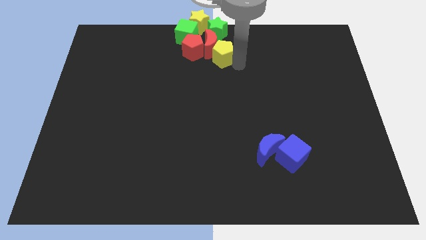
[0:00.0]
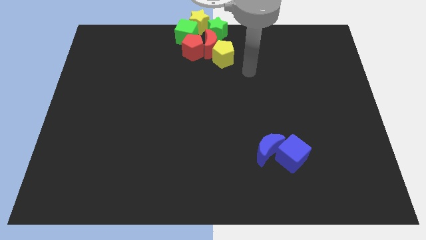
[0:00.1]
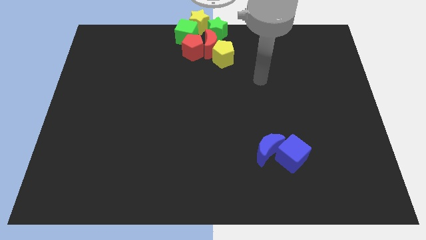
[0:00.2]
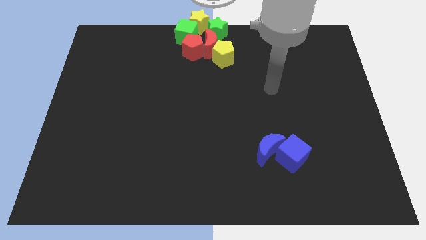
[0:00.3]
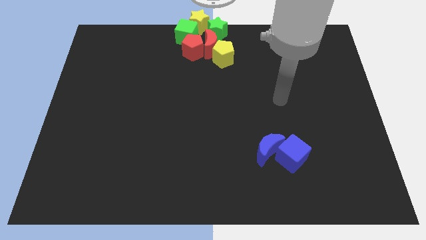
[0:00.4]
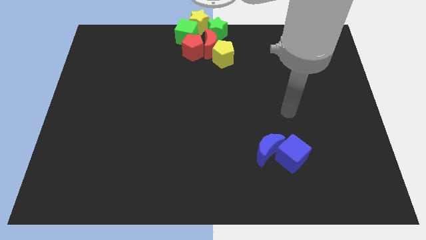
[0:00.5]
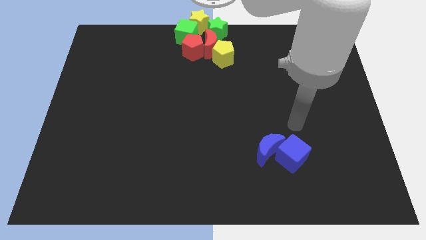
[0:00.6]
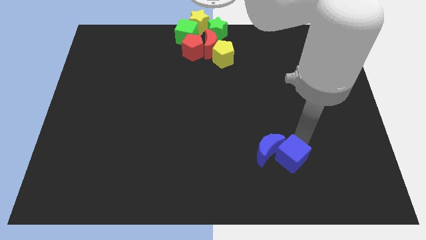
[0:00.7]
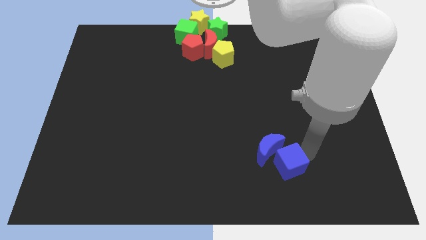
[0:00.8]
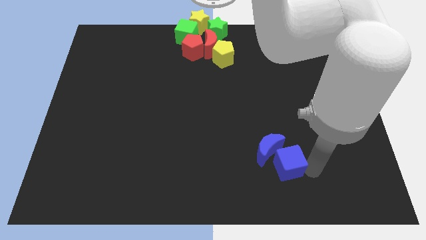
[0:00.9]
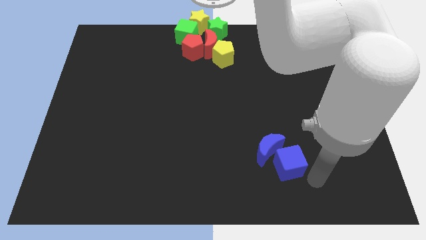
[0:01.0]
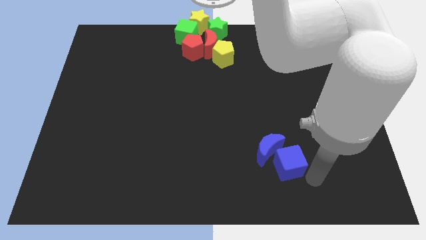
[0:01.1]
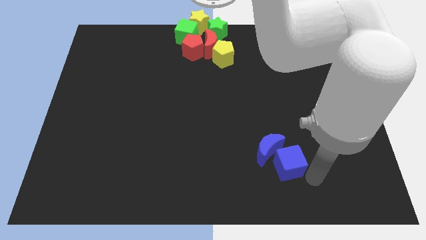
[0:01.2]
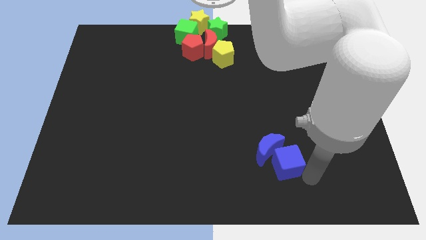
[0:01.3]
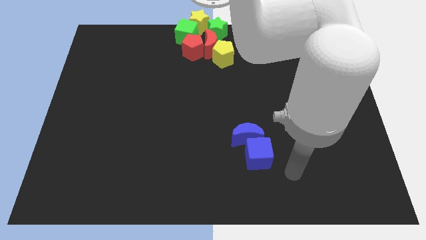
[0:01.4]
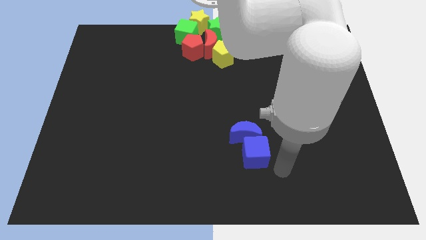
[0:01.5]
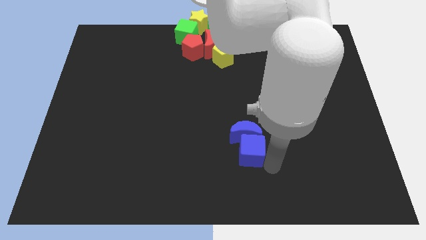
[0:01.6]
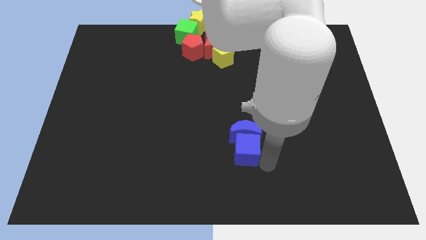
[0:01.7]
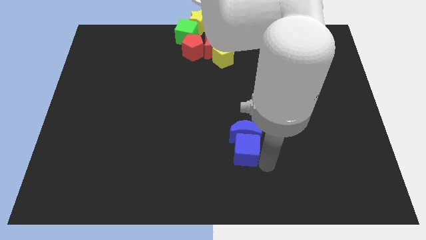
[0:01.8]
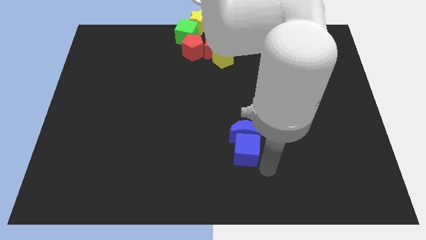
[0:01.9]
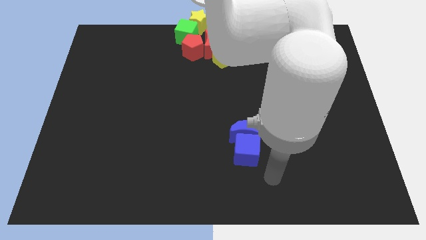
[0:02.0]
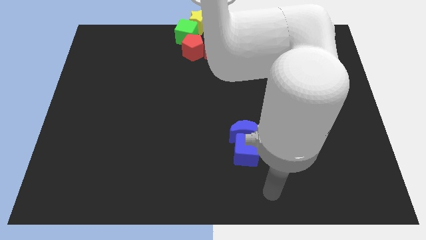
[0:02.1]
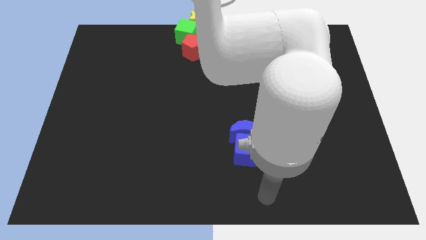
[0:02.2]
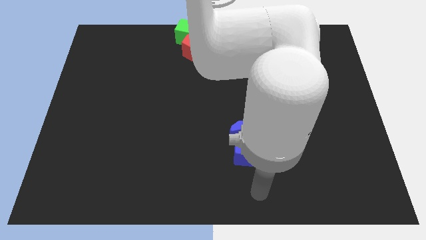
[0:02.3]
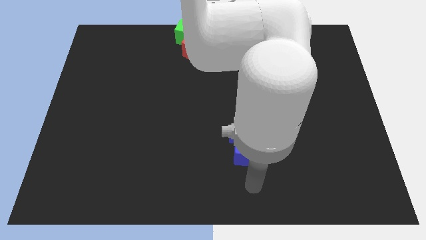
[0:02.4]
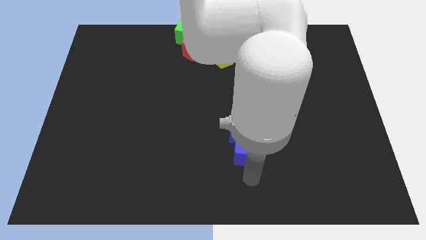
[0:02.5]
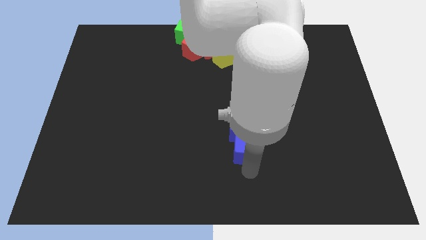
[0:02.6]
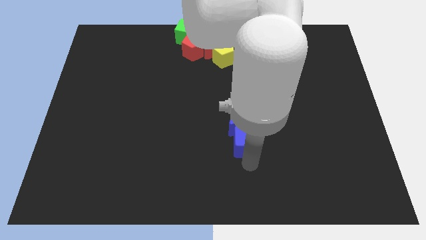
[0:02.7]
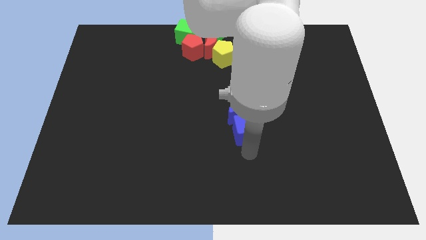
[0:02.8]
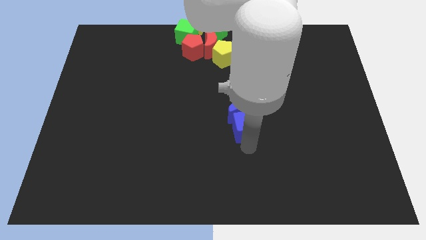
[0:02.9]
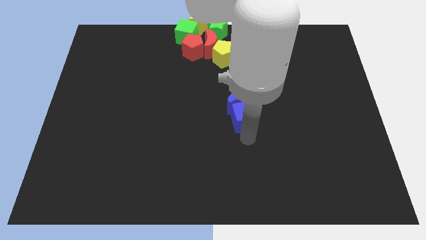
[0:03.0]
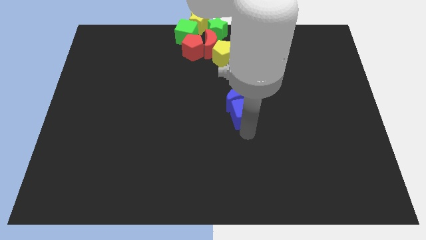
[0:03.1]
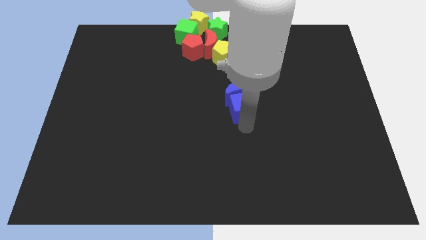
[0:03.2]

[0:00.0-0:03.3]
move the blue objects to the top center corner fo the board

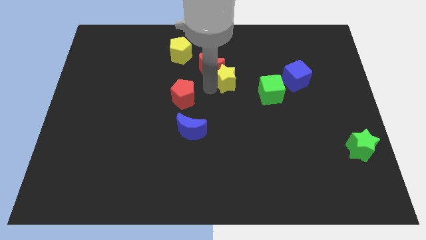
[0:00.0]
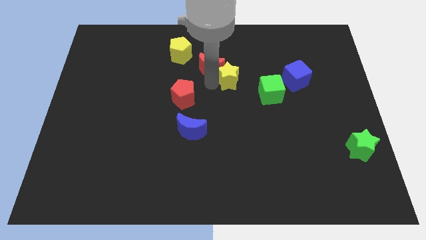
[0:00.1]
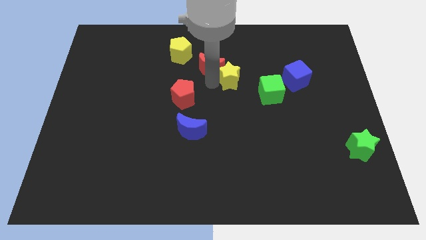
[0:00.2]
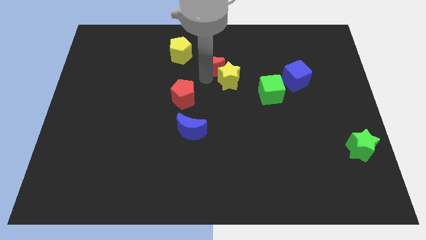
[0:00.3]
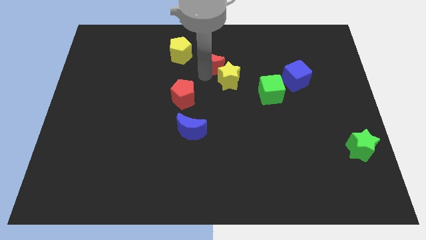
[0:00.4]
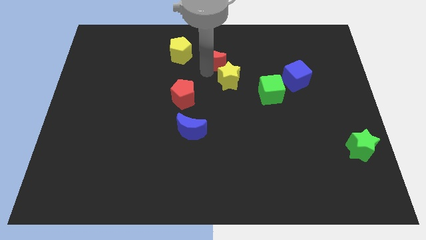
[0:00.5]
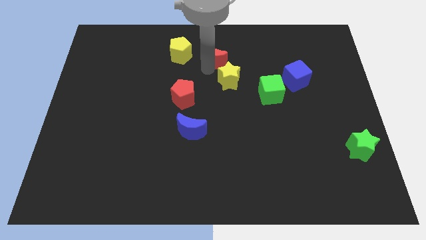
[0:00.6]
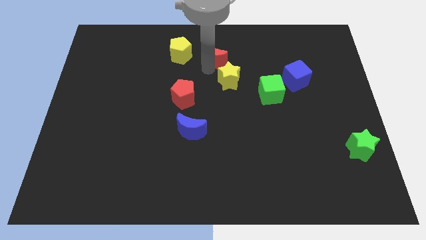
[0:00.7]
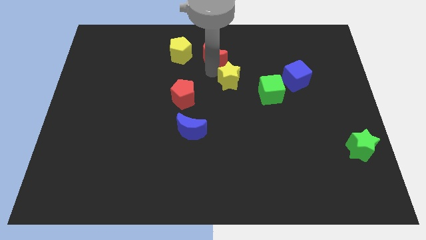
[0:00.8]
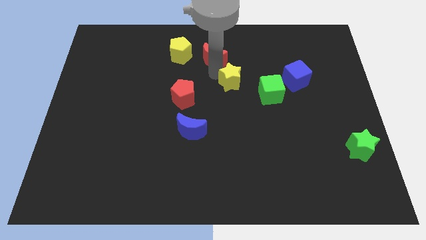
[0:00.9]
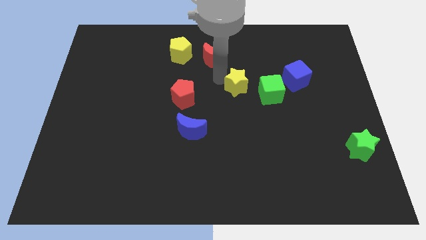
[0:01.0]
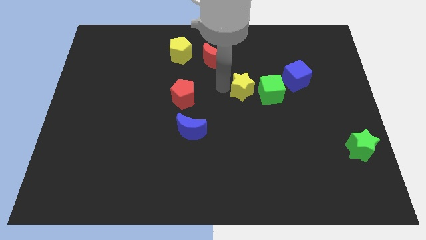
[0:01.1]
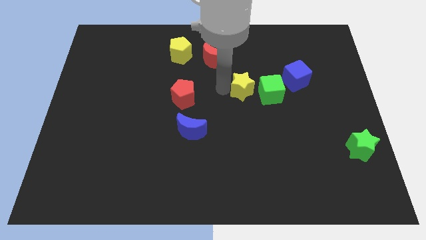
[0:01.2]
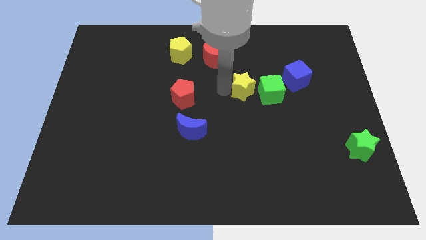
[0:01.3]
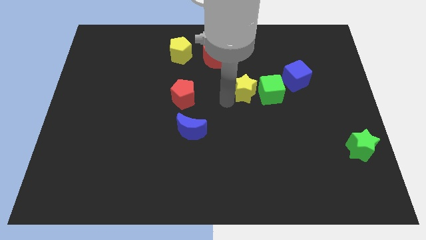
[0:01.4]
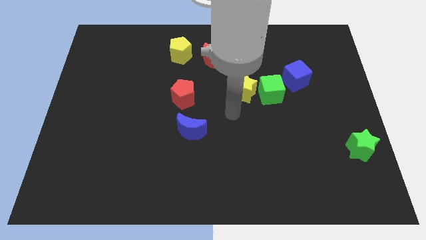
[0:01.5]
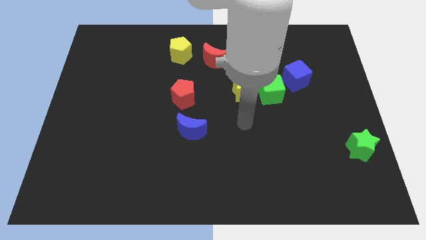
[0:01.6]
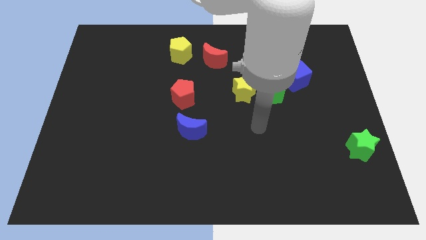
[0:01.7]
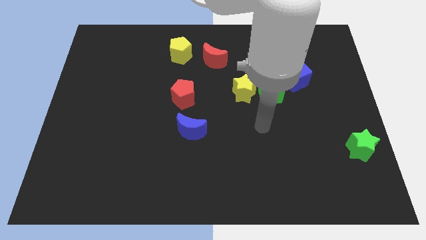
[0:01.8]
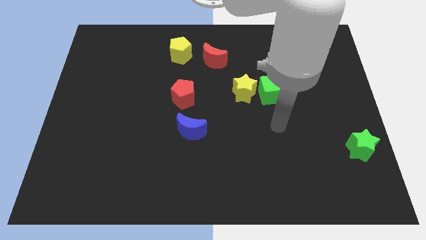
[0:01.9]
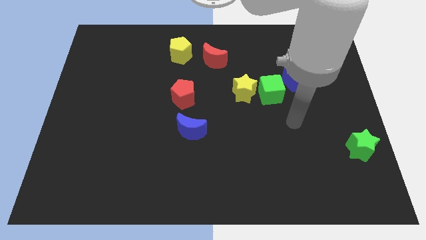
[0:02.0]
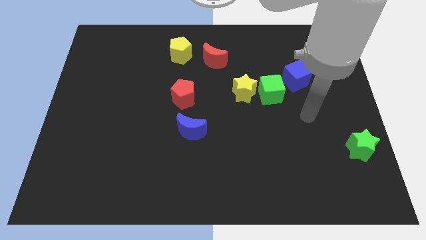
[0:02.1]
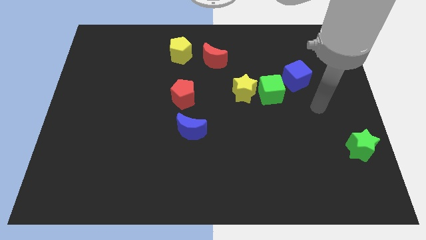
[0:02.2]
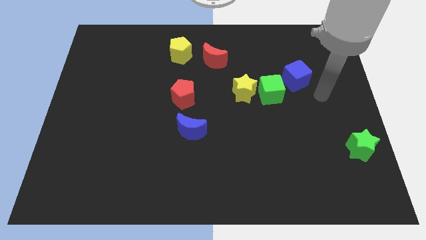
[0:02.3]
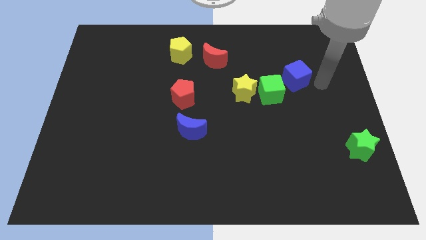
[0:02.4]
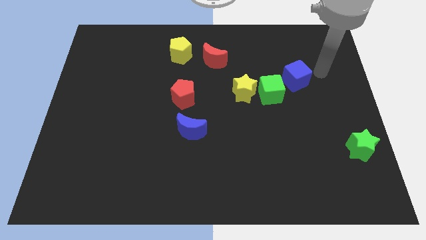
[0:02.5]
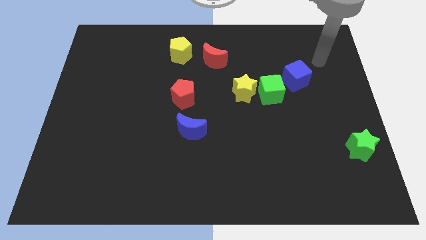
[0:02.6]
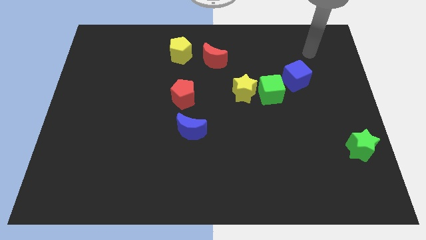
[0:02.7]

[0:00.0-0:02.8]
separate the red crescent and the yellow star

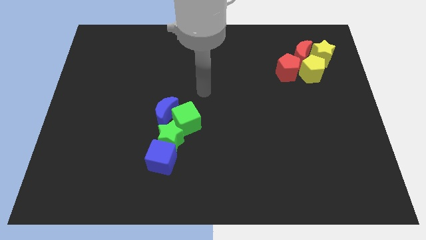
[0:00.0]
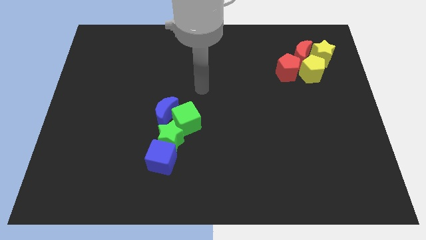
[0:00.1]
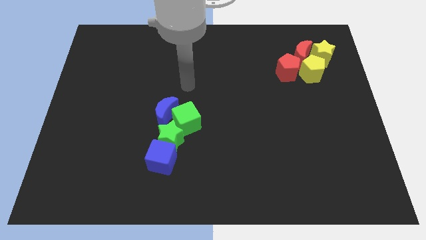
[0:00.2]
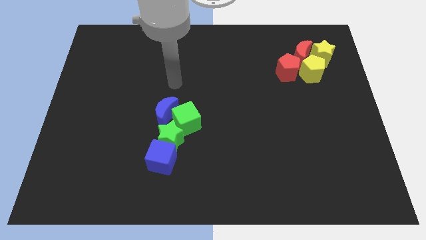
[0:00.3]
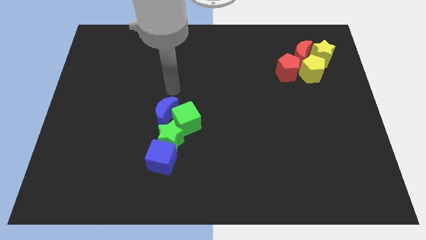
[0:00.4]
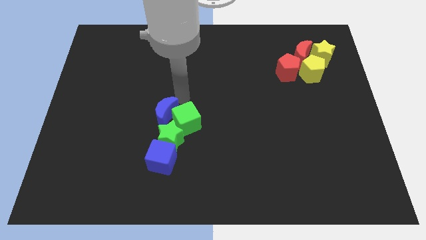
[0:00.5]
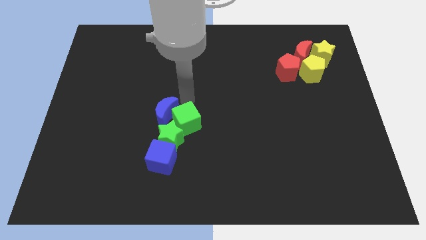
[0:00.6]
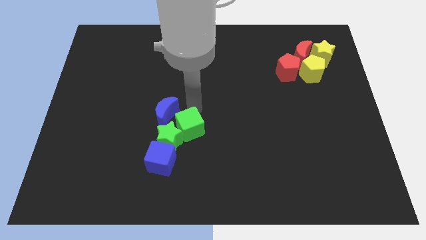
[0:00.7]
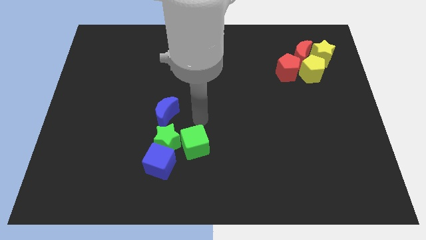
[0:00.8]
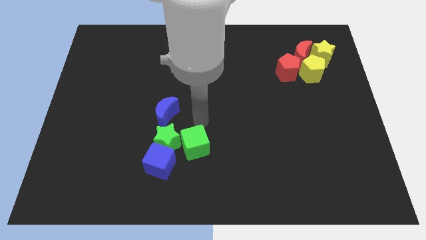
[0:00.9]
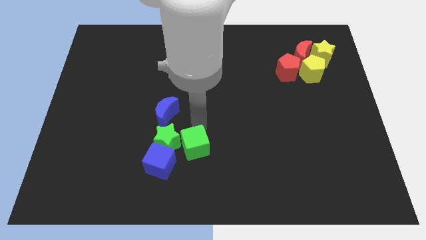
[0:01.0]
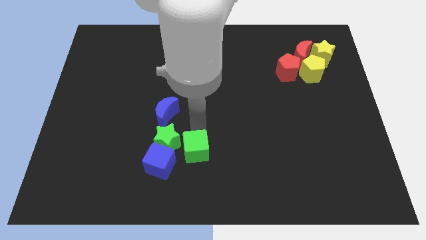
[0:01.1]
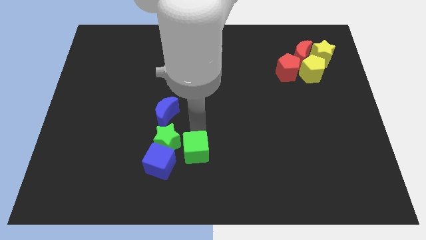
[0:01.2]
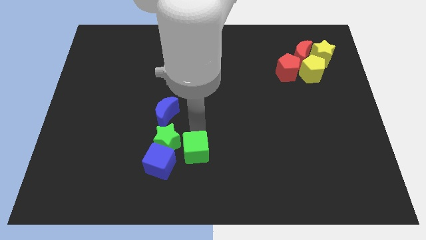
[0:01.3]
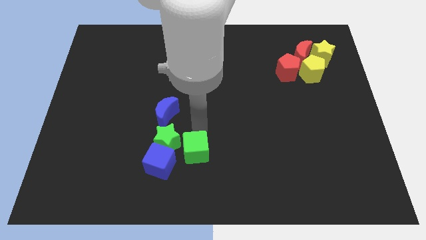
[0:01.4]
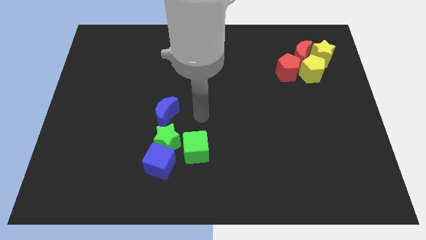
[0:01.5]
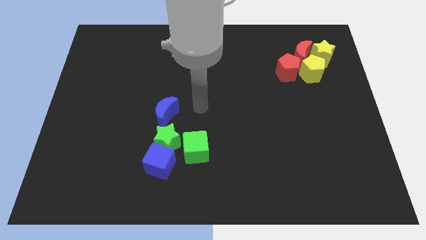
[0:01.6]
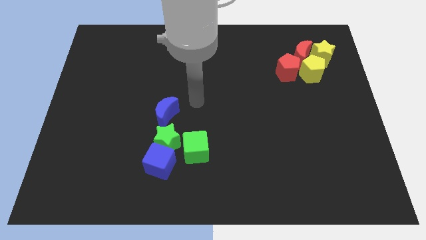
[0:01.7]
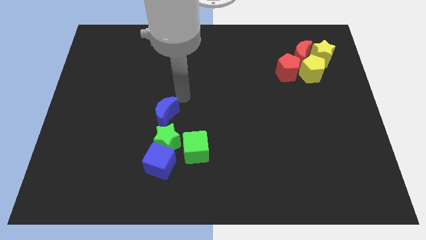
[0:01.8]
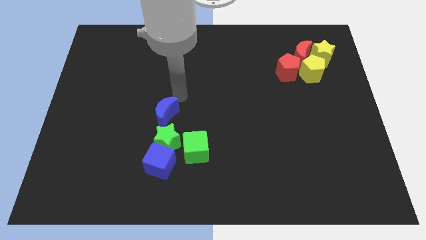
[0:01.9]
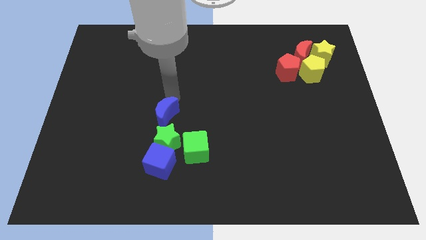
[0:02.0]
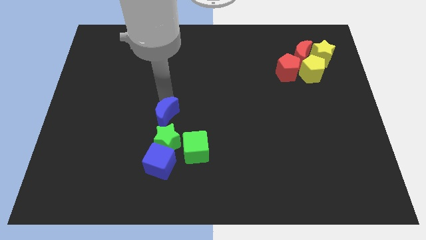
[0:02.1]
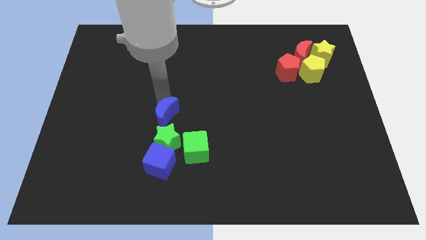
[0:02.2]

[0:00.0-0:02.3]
separate the green cube and blue crescent

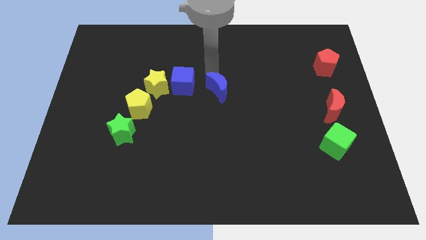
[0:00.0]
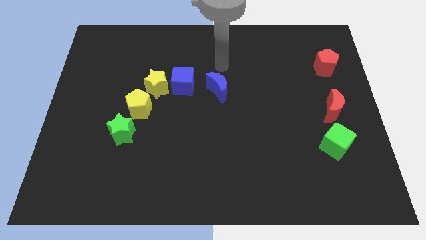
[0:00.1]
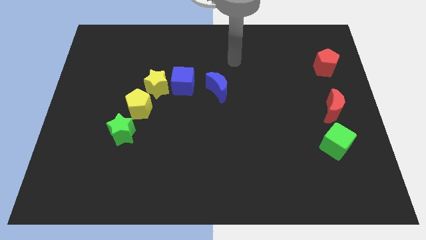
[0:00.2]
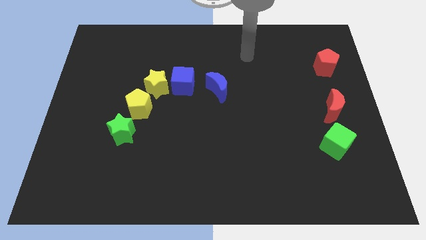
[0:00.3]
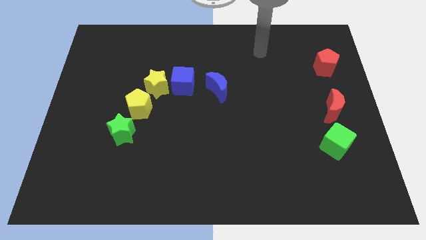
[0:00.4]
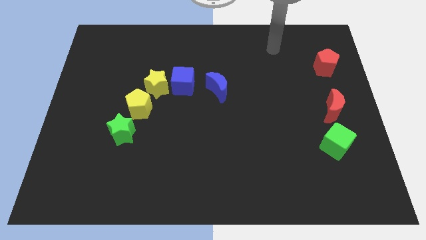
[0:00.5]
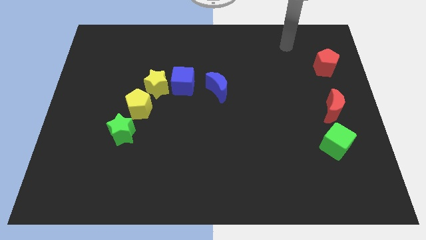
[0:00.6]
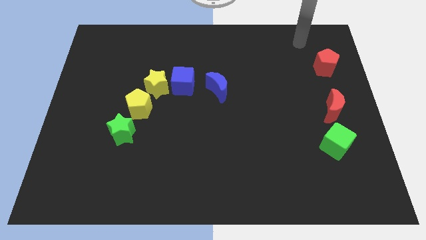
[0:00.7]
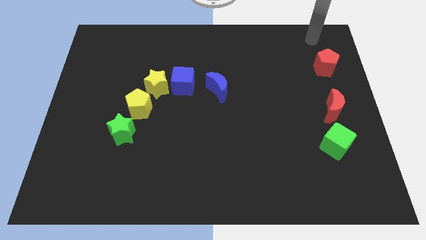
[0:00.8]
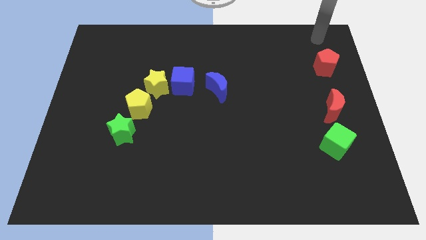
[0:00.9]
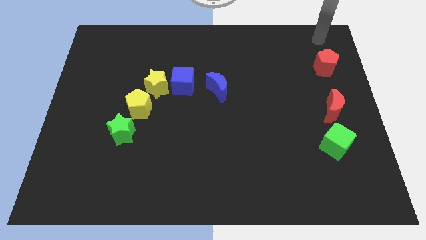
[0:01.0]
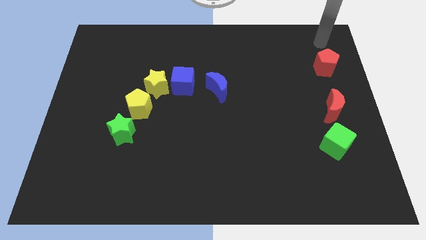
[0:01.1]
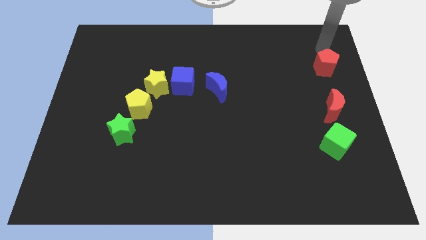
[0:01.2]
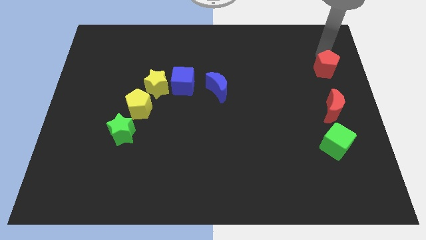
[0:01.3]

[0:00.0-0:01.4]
tap the red pentagon
